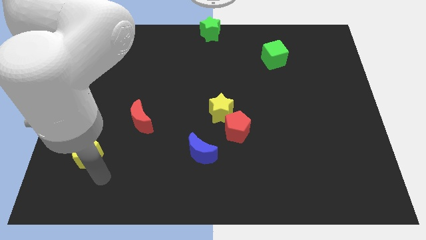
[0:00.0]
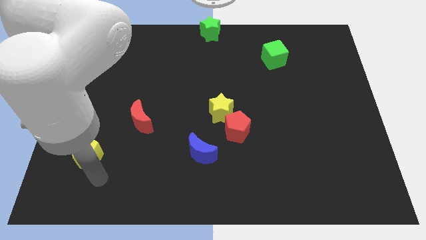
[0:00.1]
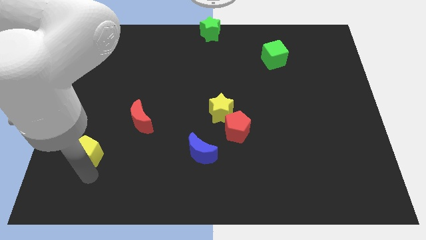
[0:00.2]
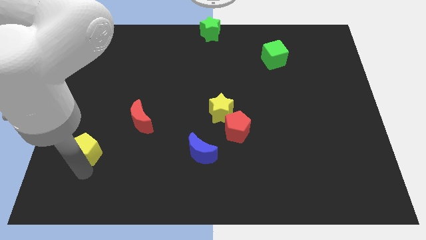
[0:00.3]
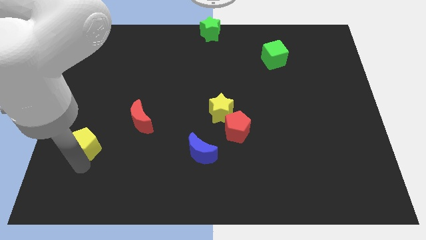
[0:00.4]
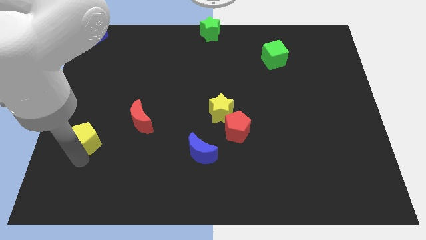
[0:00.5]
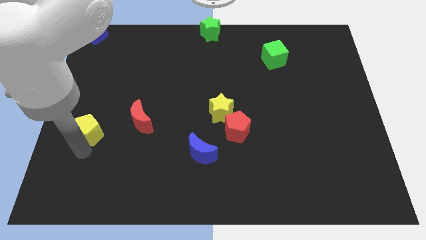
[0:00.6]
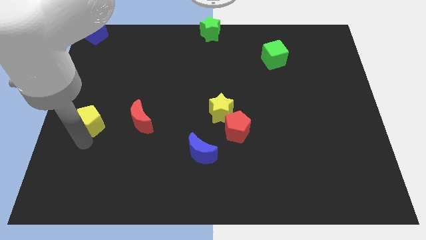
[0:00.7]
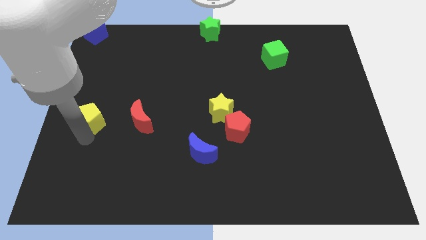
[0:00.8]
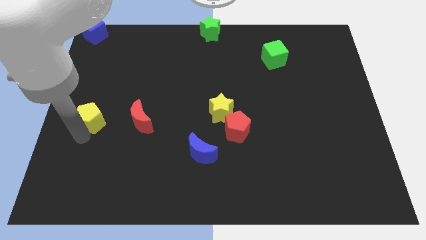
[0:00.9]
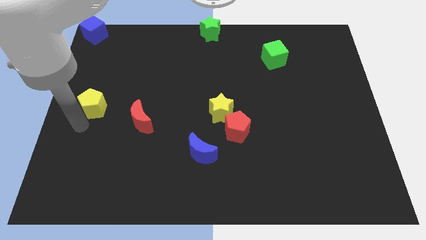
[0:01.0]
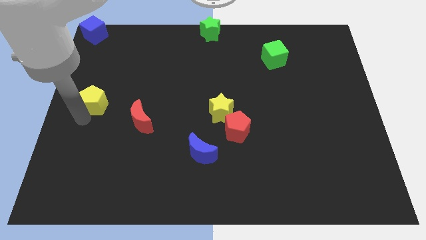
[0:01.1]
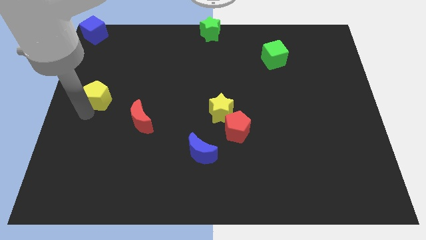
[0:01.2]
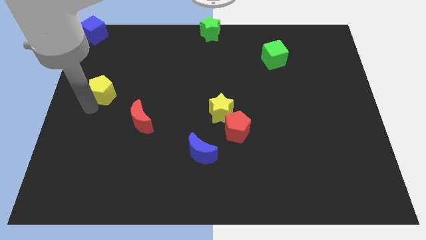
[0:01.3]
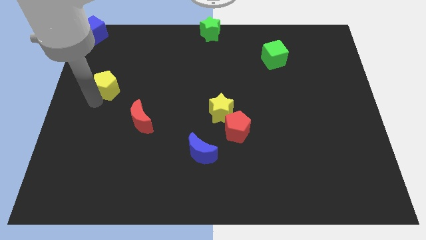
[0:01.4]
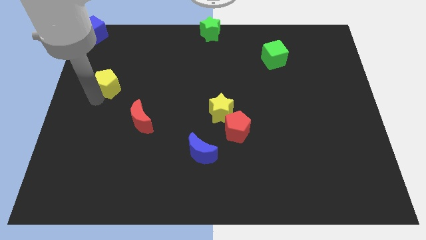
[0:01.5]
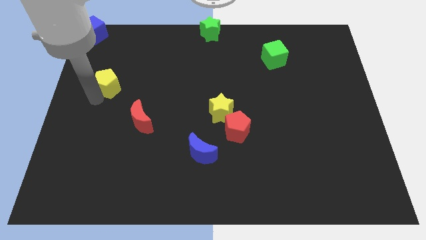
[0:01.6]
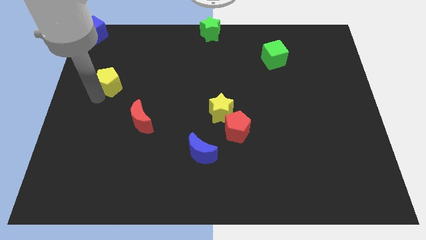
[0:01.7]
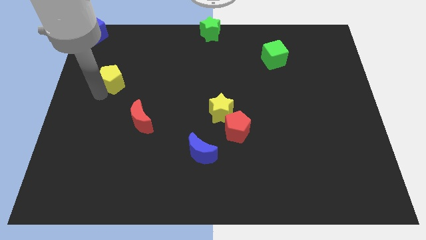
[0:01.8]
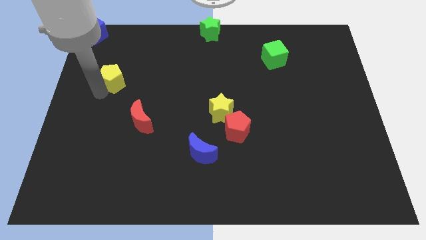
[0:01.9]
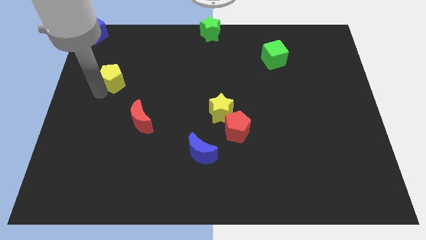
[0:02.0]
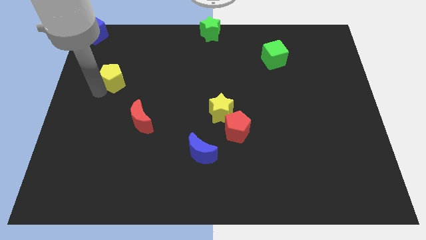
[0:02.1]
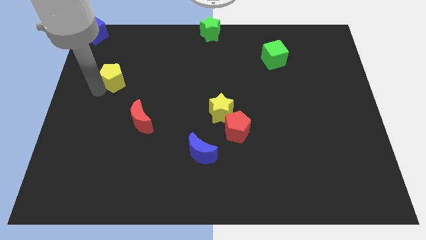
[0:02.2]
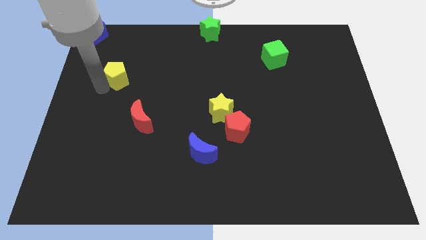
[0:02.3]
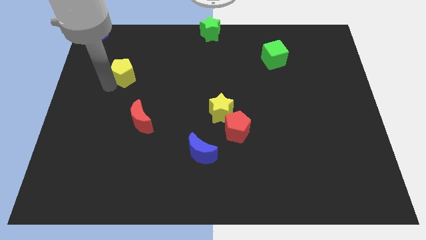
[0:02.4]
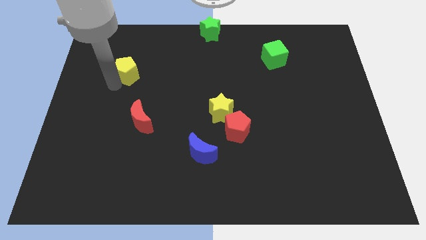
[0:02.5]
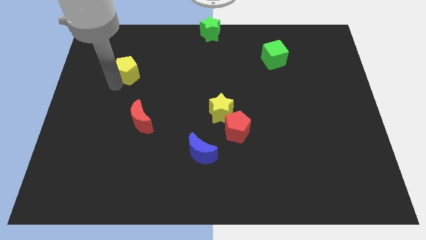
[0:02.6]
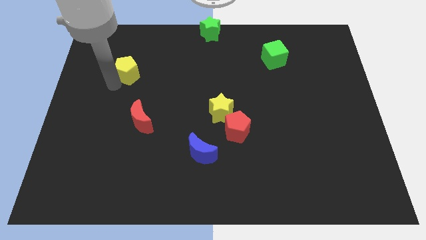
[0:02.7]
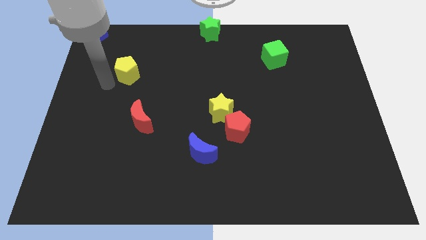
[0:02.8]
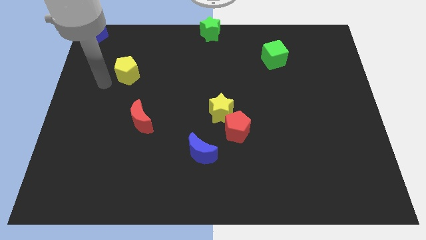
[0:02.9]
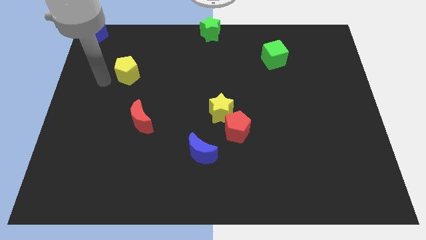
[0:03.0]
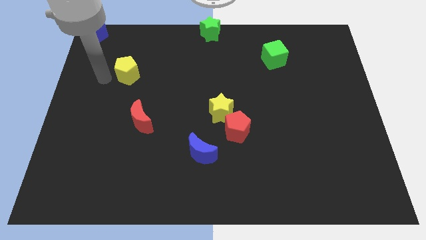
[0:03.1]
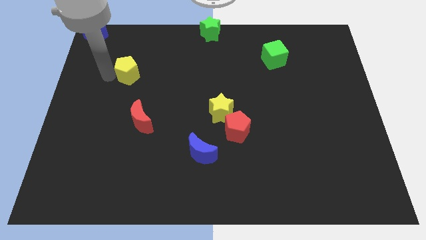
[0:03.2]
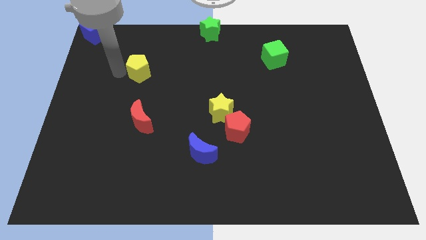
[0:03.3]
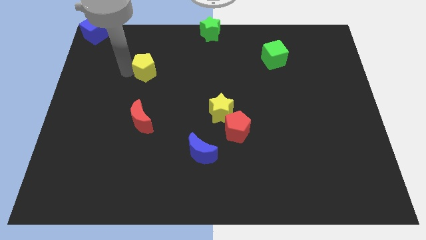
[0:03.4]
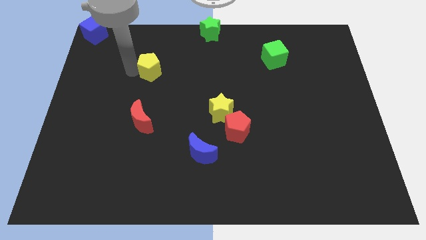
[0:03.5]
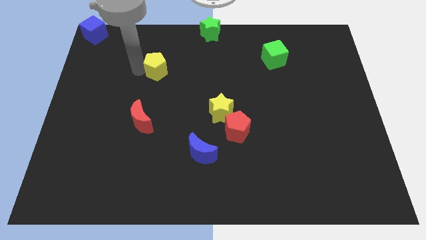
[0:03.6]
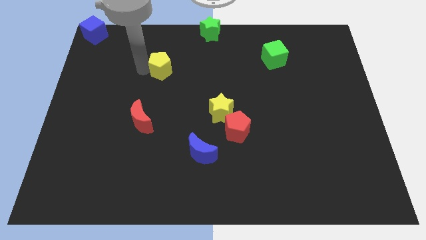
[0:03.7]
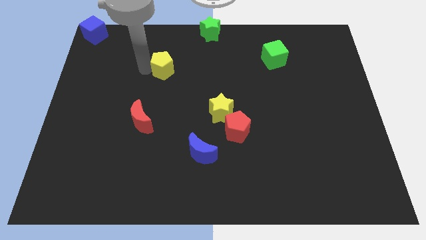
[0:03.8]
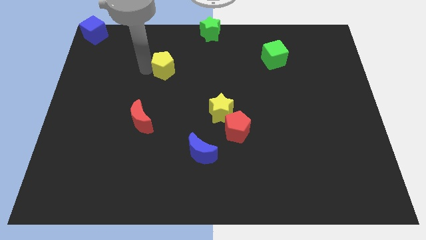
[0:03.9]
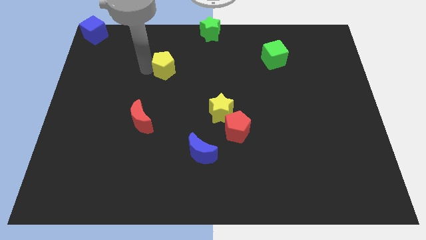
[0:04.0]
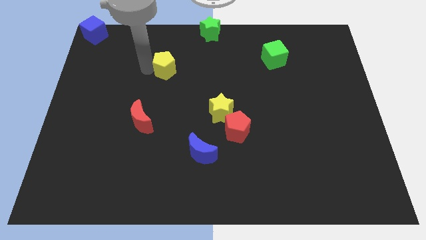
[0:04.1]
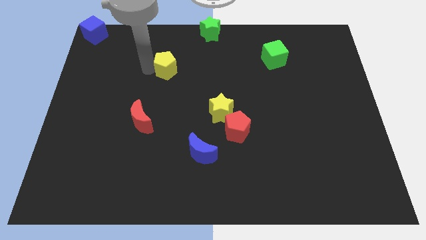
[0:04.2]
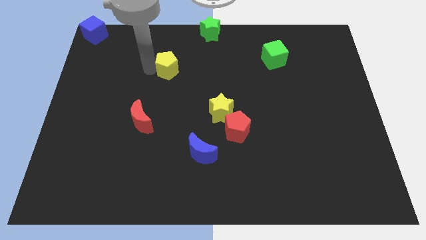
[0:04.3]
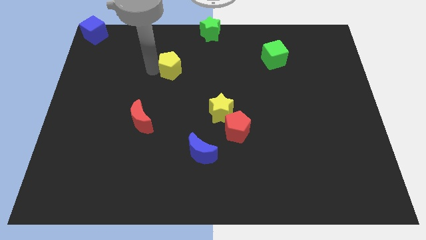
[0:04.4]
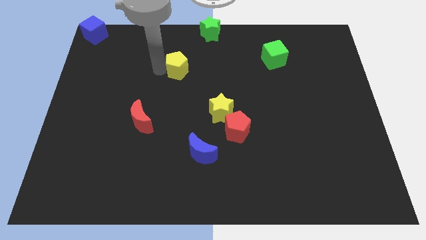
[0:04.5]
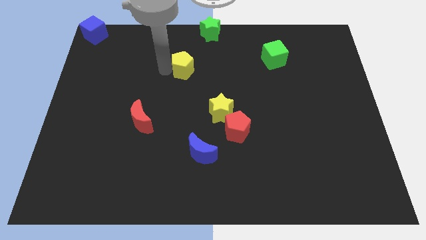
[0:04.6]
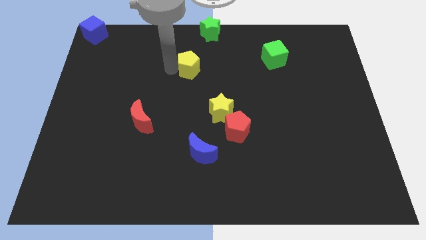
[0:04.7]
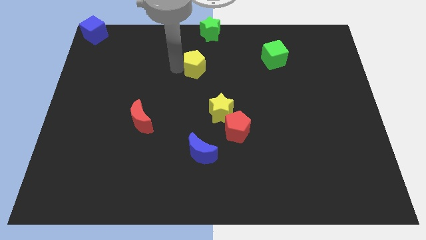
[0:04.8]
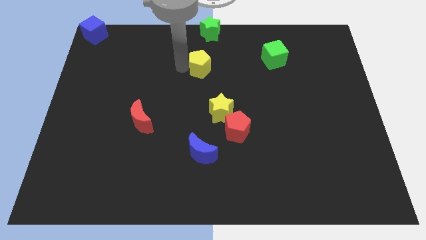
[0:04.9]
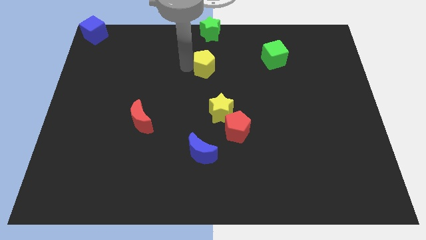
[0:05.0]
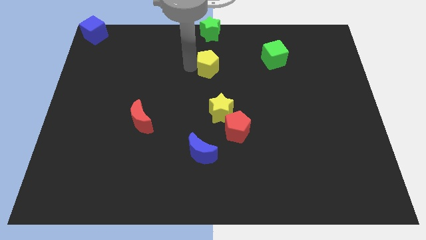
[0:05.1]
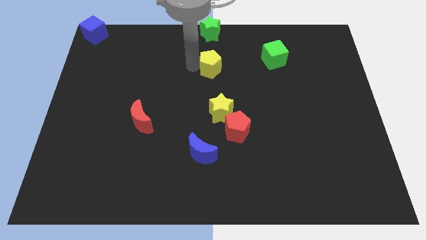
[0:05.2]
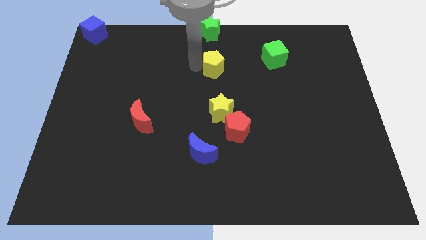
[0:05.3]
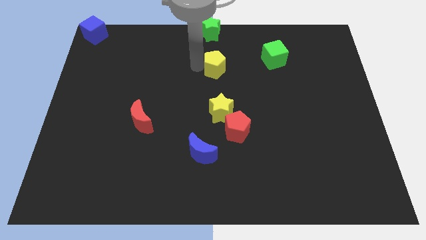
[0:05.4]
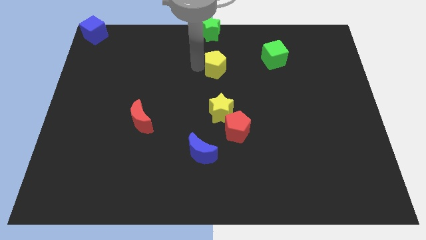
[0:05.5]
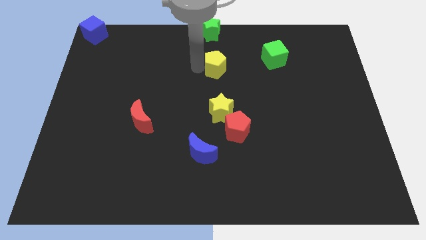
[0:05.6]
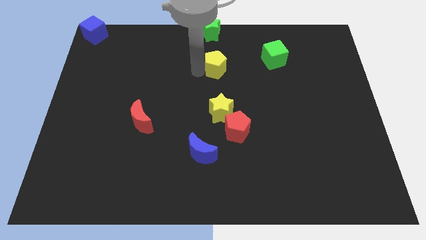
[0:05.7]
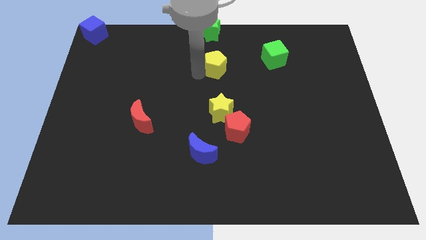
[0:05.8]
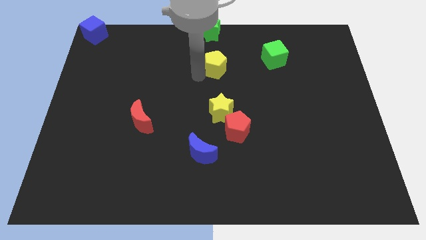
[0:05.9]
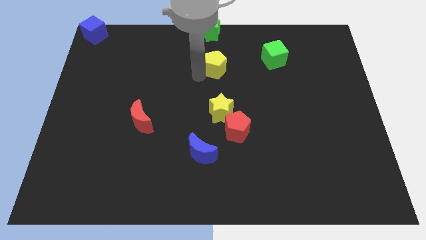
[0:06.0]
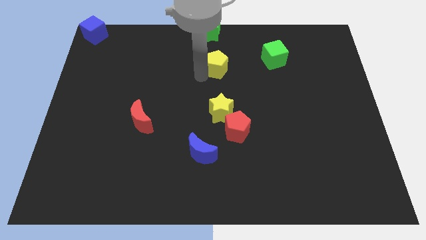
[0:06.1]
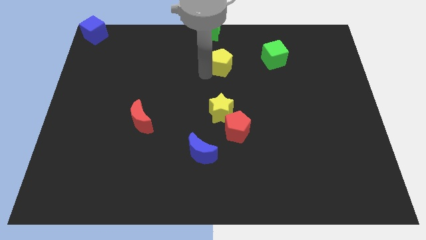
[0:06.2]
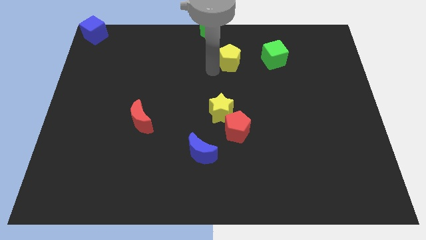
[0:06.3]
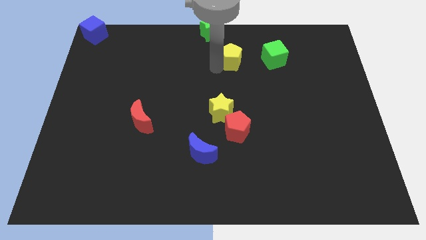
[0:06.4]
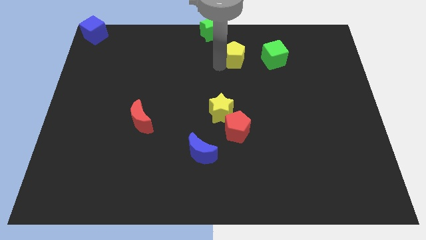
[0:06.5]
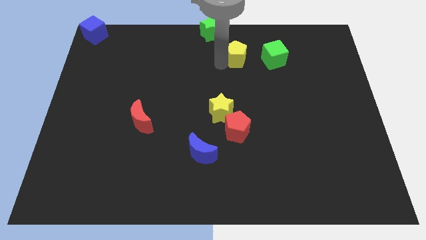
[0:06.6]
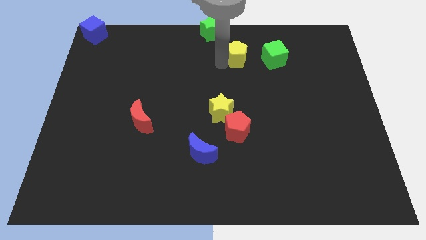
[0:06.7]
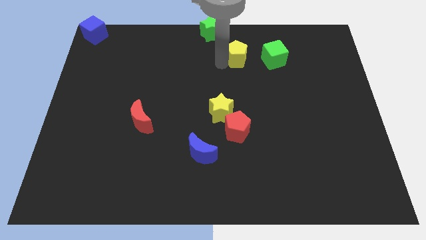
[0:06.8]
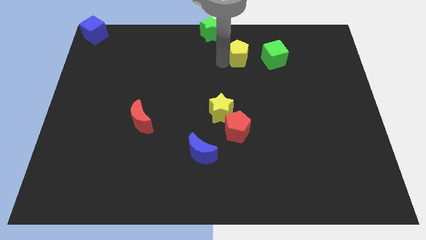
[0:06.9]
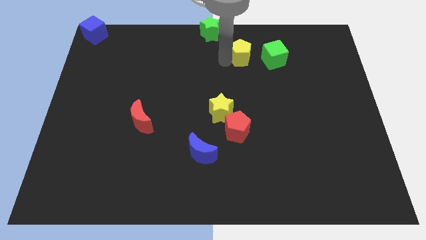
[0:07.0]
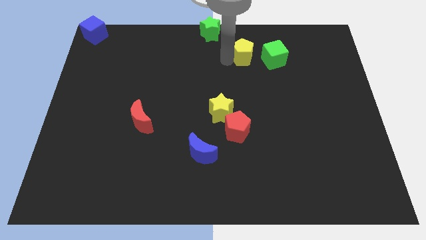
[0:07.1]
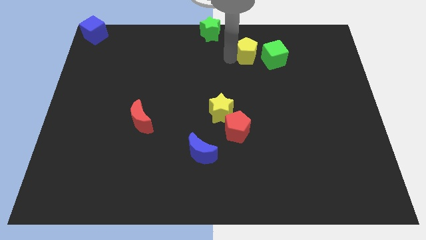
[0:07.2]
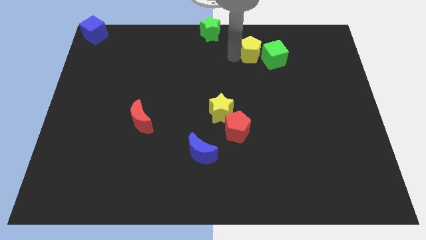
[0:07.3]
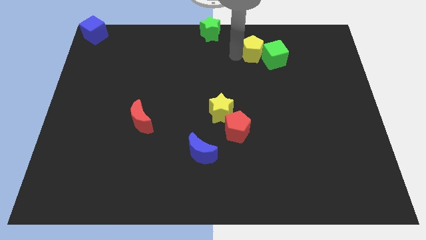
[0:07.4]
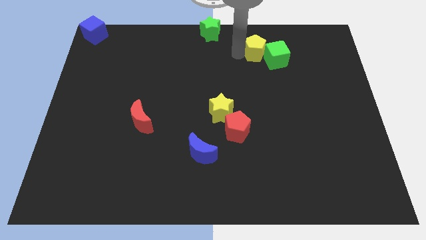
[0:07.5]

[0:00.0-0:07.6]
place yellow pentagon beside green cube

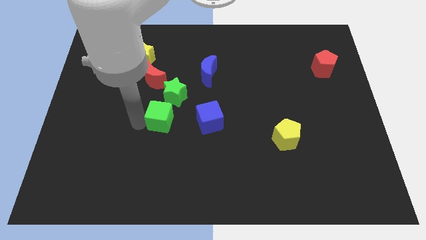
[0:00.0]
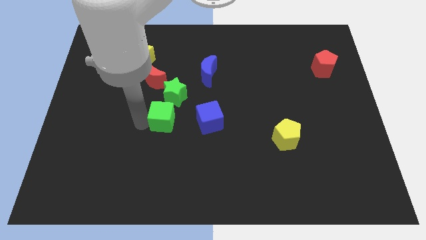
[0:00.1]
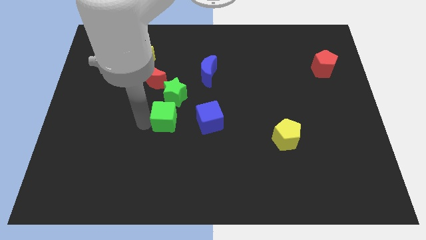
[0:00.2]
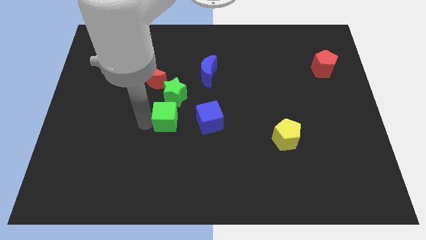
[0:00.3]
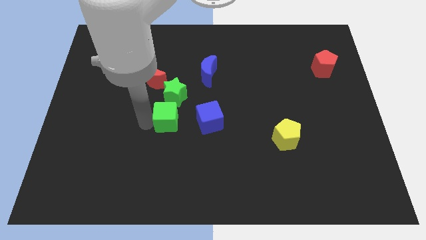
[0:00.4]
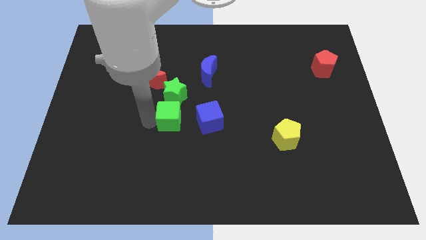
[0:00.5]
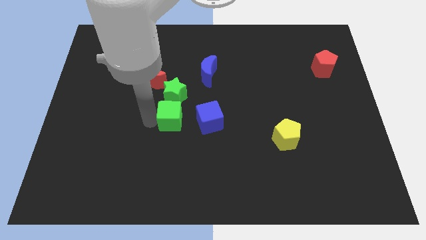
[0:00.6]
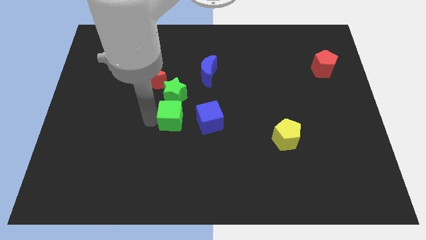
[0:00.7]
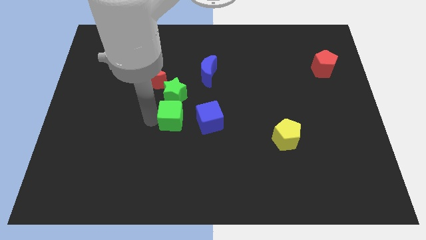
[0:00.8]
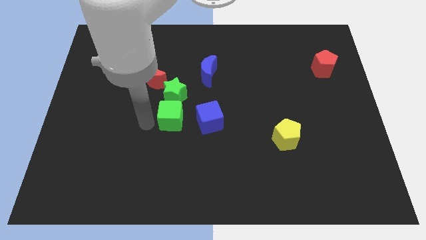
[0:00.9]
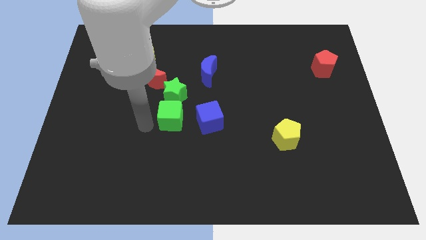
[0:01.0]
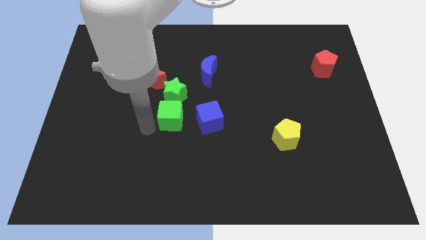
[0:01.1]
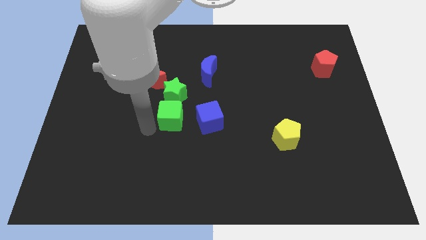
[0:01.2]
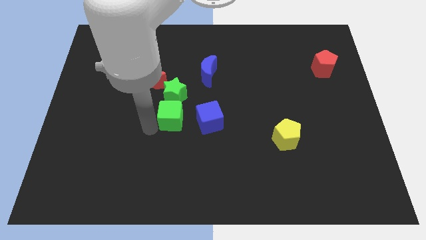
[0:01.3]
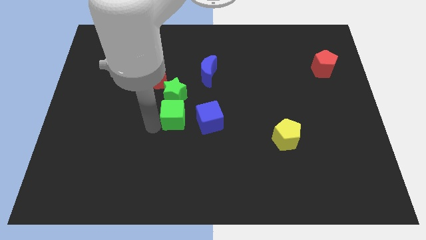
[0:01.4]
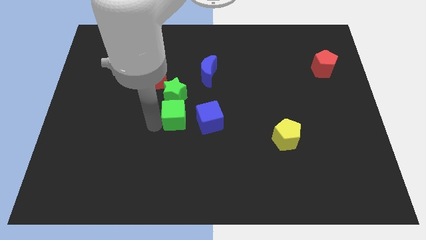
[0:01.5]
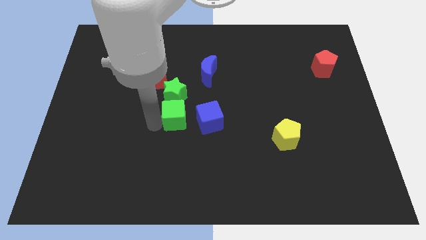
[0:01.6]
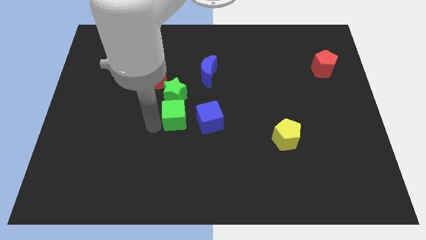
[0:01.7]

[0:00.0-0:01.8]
slide the green cube to the bottom side of the green star
